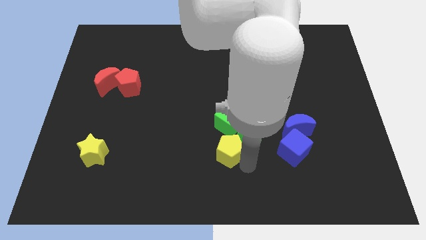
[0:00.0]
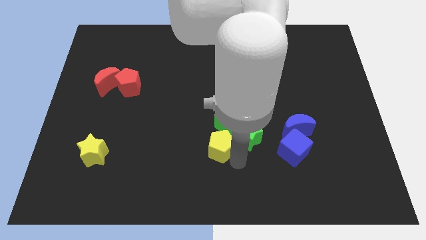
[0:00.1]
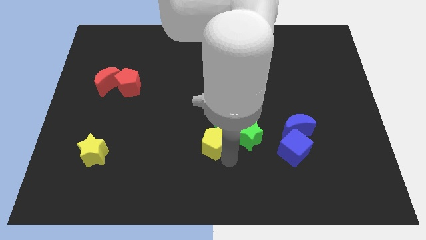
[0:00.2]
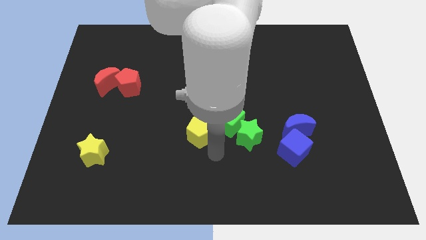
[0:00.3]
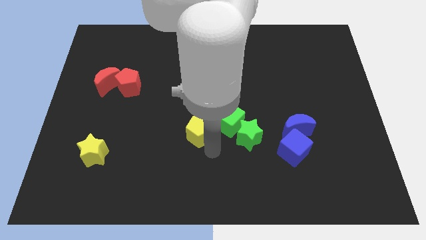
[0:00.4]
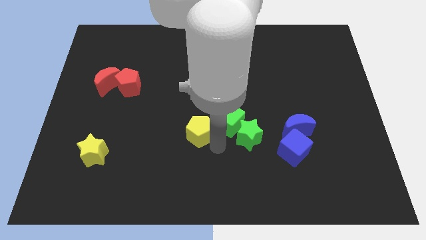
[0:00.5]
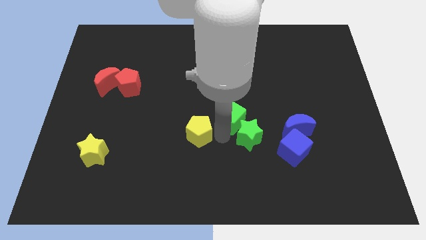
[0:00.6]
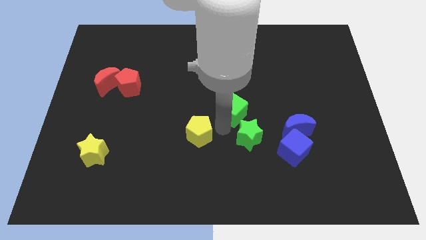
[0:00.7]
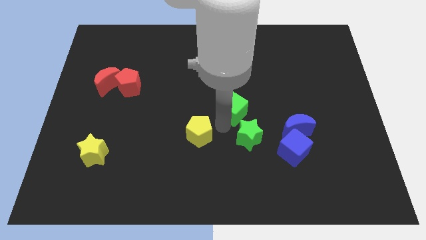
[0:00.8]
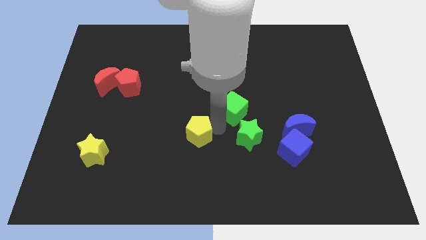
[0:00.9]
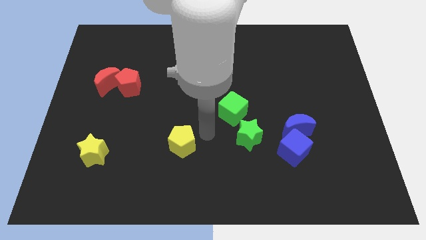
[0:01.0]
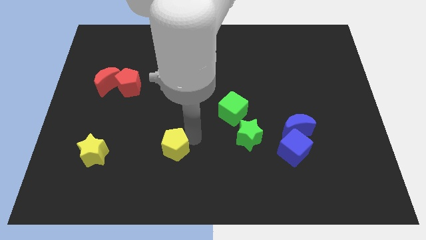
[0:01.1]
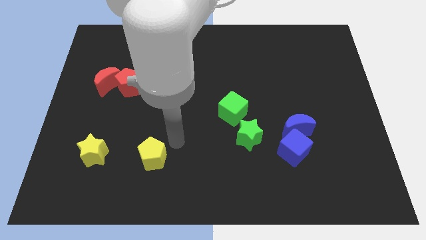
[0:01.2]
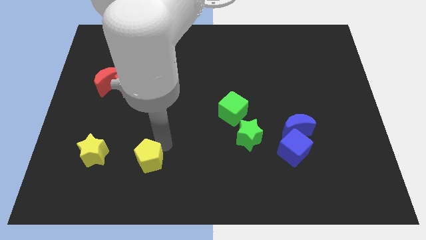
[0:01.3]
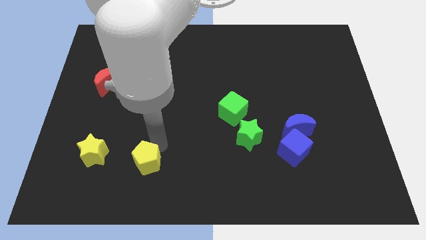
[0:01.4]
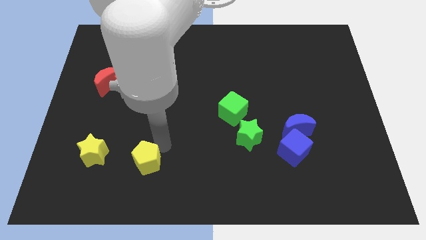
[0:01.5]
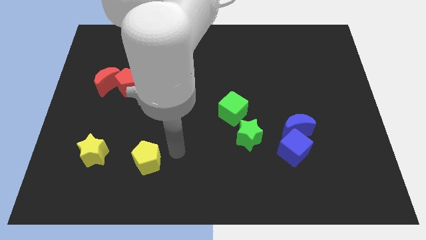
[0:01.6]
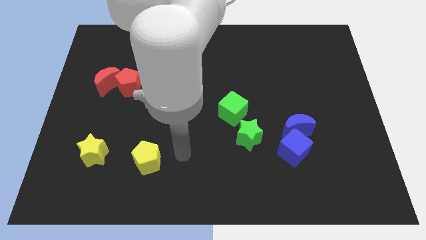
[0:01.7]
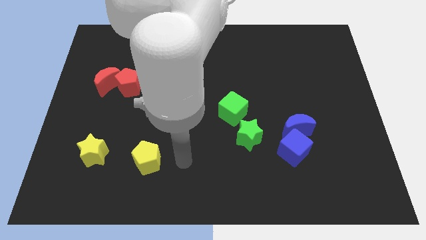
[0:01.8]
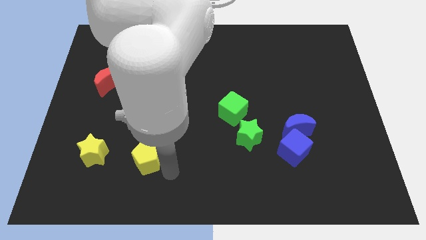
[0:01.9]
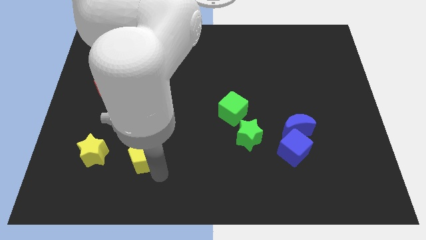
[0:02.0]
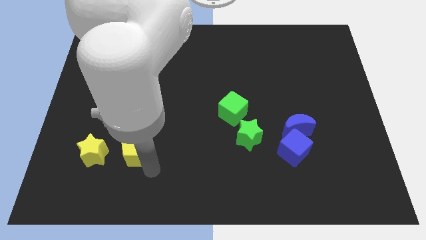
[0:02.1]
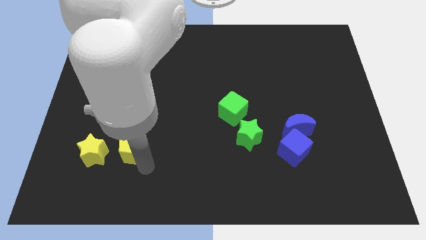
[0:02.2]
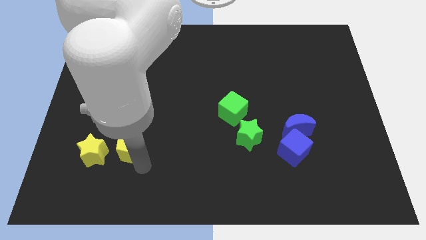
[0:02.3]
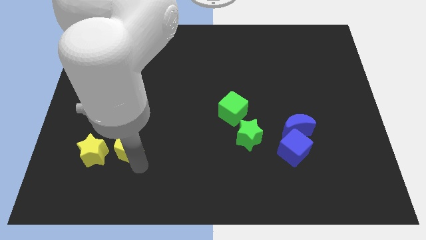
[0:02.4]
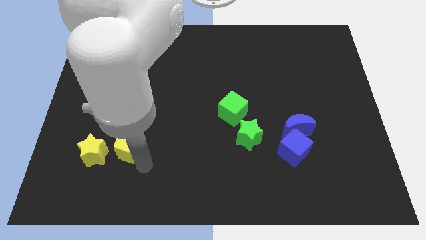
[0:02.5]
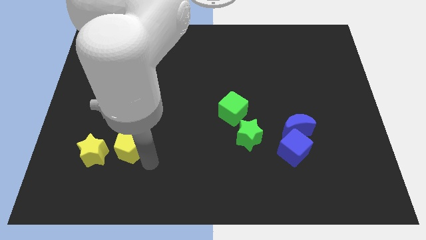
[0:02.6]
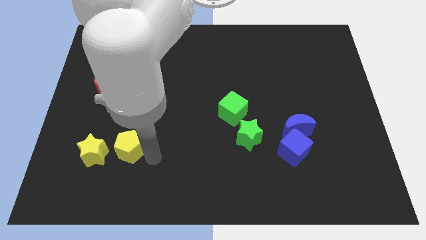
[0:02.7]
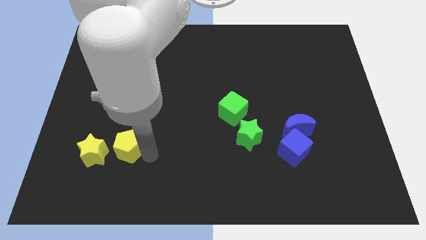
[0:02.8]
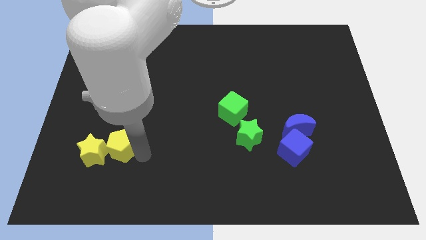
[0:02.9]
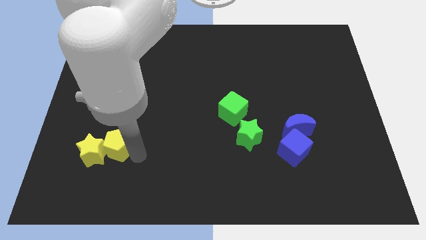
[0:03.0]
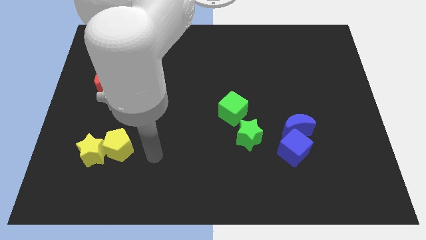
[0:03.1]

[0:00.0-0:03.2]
place the yellow pentagon right of the yellow star

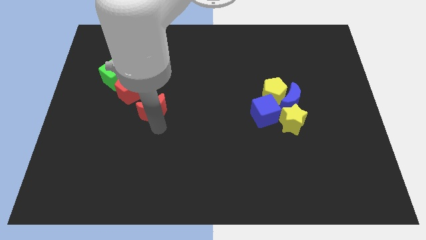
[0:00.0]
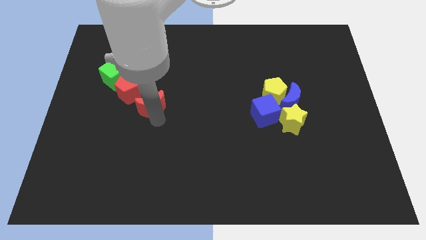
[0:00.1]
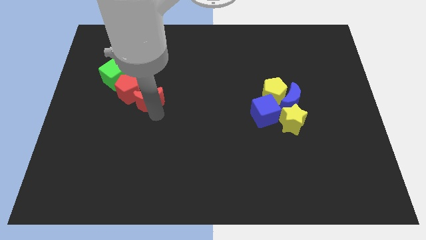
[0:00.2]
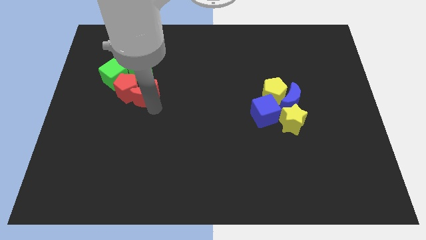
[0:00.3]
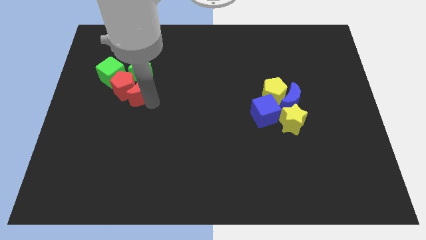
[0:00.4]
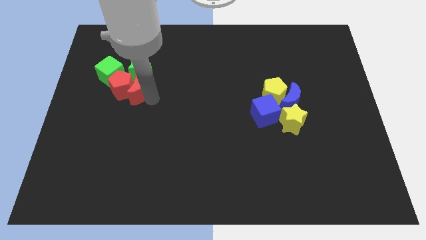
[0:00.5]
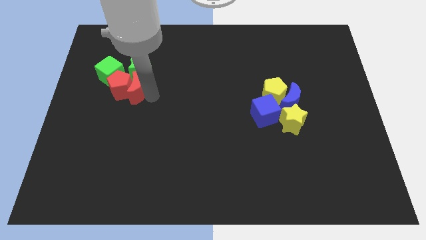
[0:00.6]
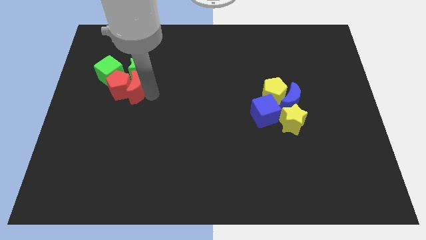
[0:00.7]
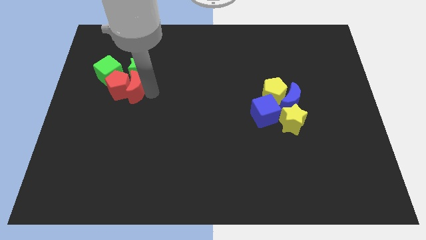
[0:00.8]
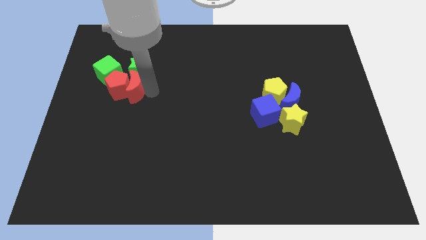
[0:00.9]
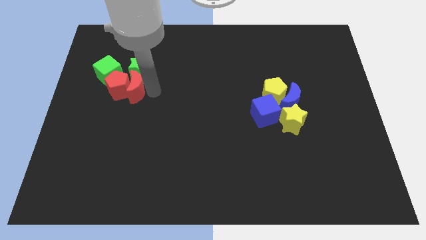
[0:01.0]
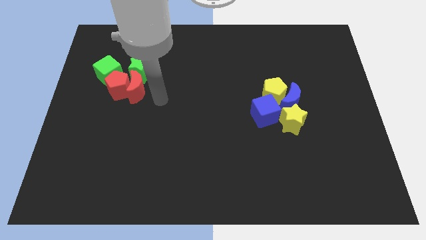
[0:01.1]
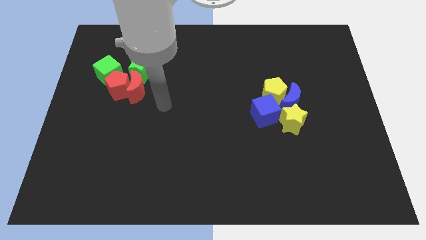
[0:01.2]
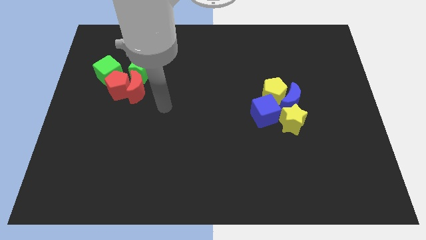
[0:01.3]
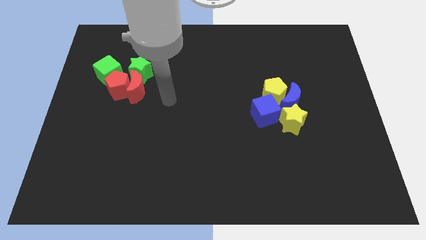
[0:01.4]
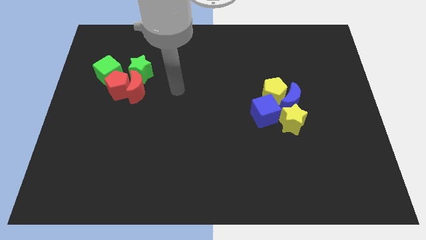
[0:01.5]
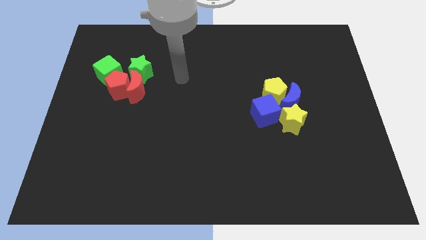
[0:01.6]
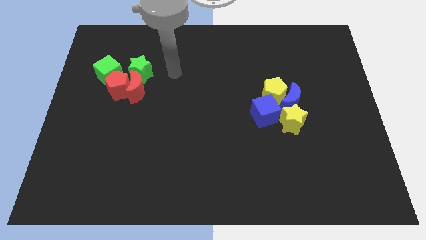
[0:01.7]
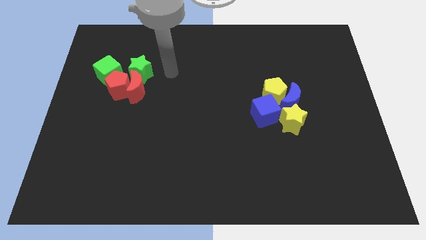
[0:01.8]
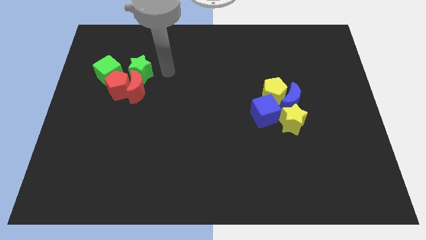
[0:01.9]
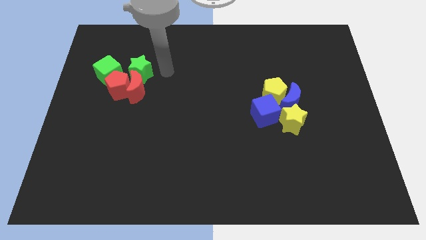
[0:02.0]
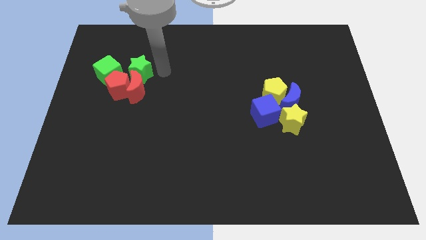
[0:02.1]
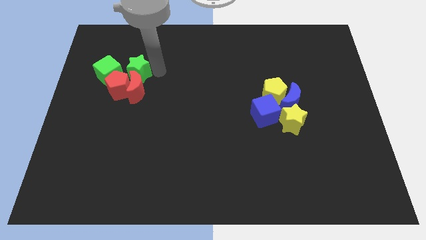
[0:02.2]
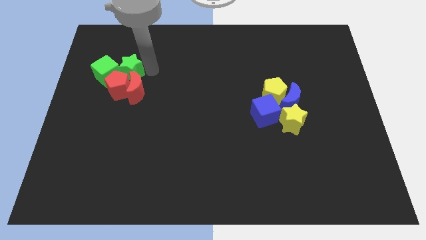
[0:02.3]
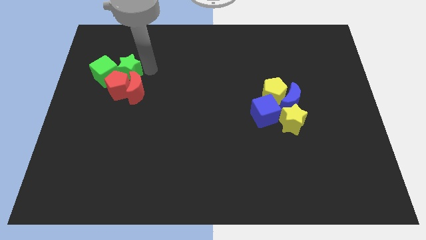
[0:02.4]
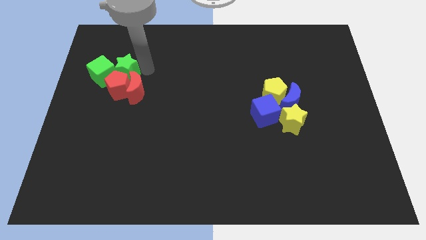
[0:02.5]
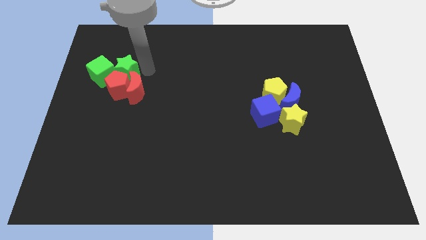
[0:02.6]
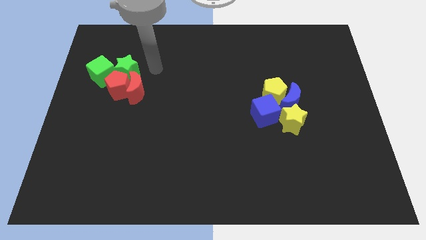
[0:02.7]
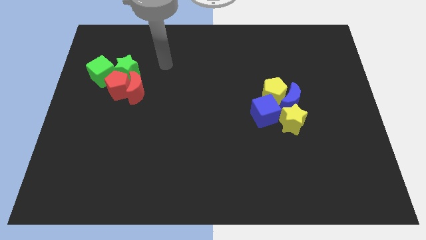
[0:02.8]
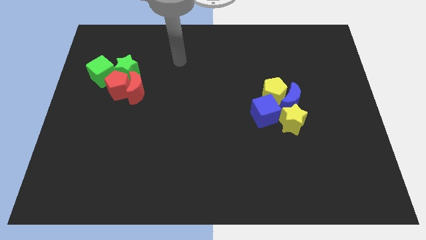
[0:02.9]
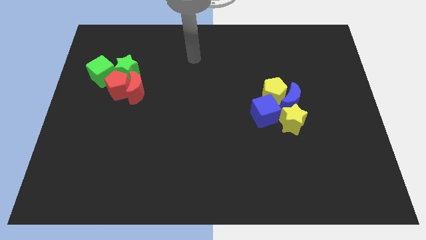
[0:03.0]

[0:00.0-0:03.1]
adjust the group of blocks at the left side of the board

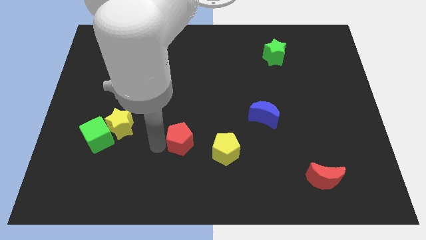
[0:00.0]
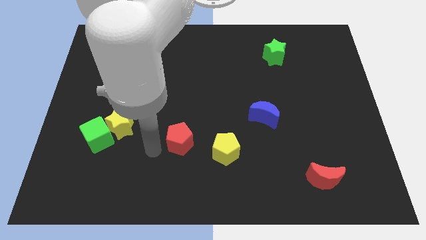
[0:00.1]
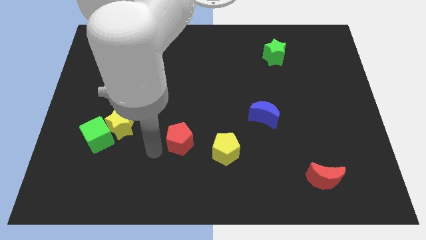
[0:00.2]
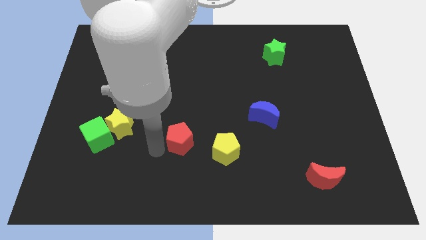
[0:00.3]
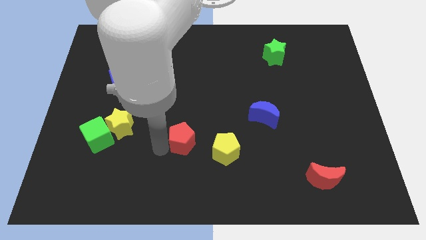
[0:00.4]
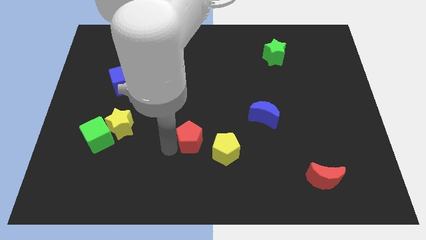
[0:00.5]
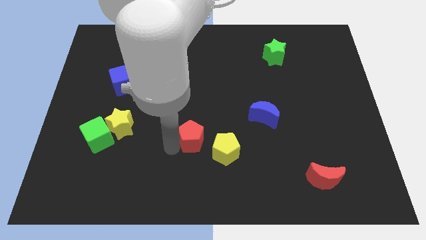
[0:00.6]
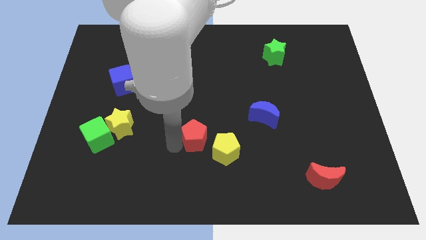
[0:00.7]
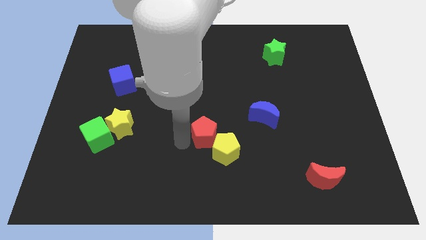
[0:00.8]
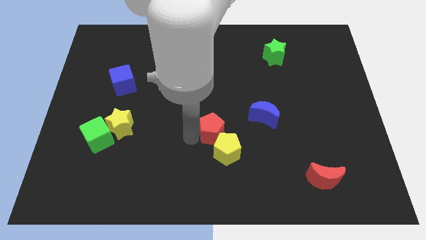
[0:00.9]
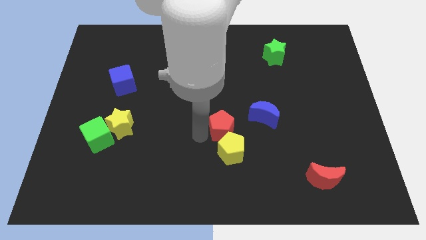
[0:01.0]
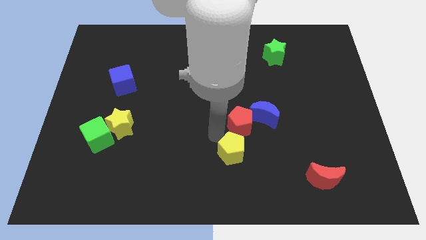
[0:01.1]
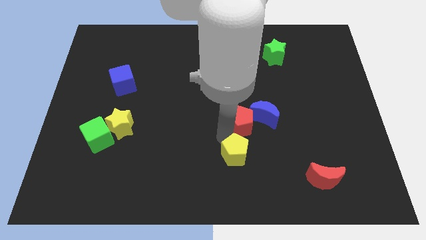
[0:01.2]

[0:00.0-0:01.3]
move the red pentagon to the top of the yellow pentagon

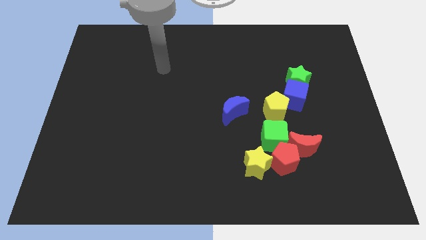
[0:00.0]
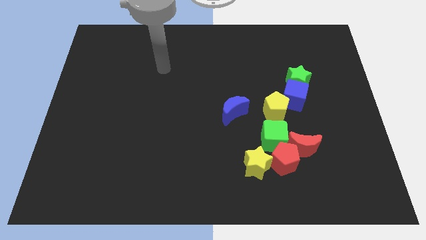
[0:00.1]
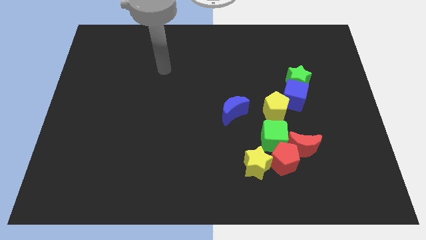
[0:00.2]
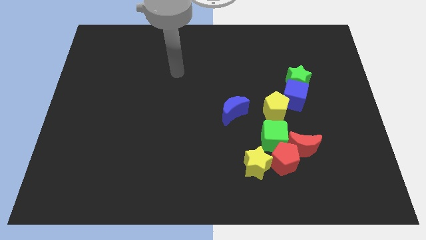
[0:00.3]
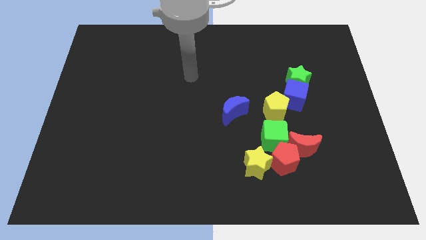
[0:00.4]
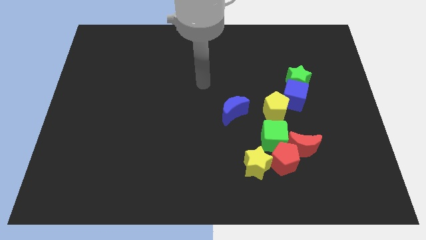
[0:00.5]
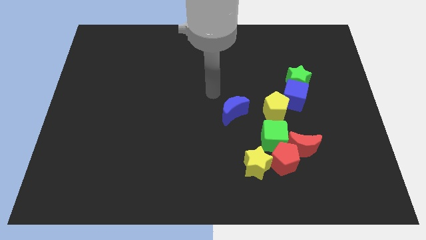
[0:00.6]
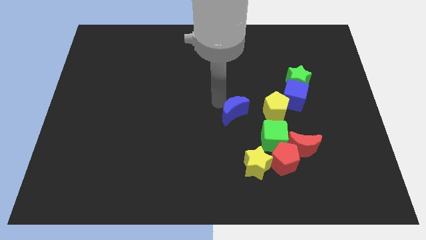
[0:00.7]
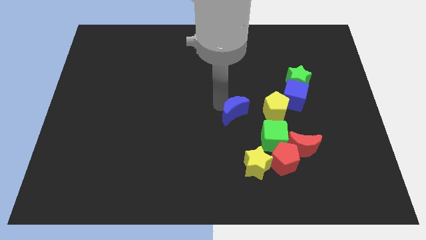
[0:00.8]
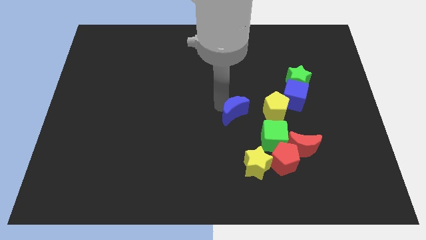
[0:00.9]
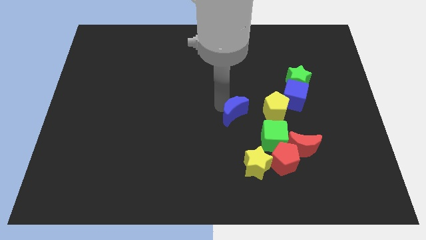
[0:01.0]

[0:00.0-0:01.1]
touch the blue crescent at the top

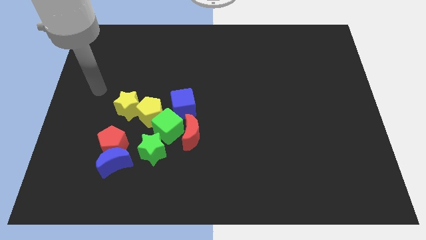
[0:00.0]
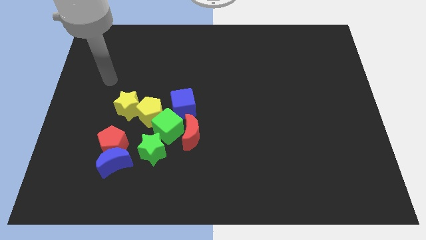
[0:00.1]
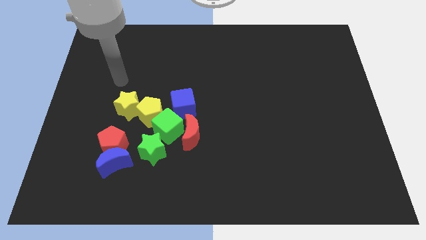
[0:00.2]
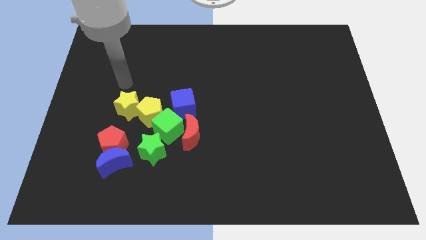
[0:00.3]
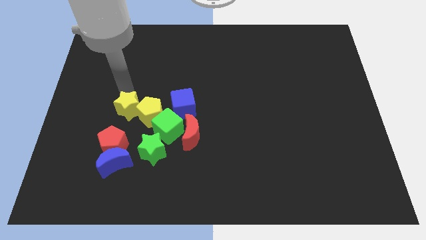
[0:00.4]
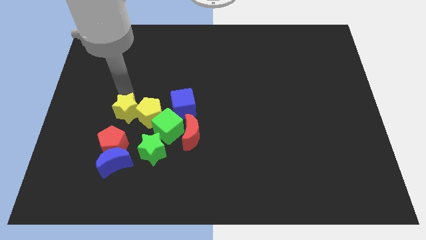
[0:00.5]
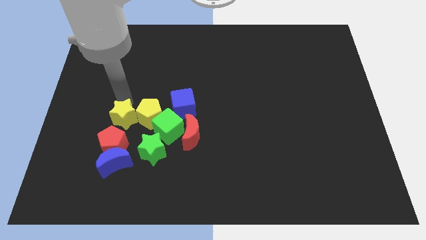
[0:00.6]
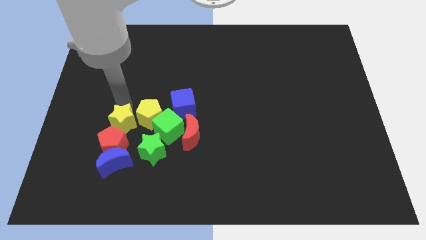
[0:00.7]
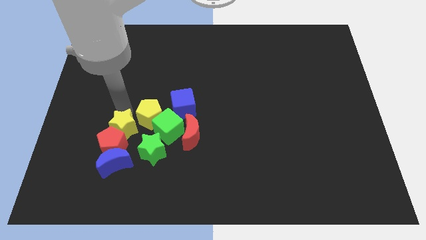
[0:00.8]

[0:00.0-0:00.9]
push the yellow star towards the red pentagon
